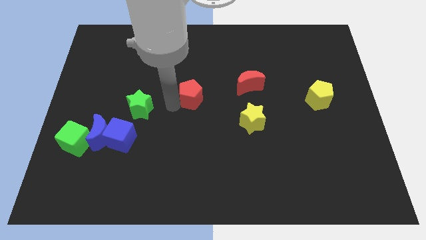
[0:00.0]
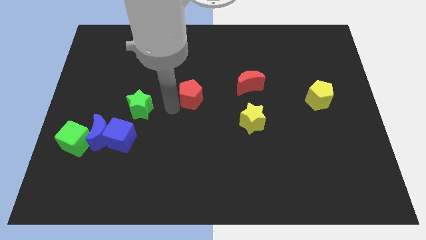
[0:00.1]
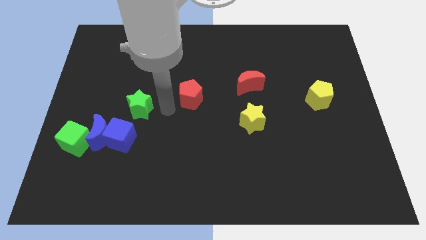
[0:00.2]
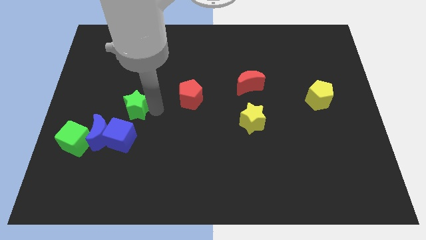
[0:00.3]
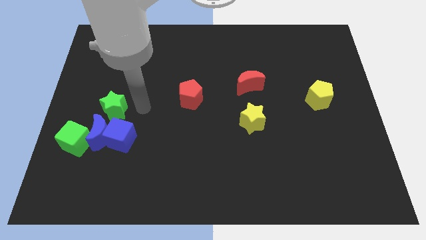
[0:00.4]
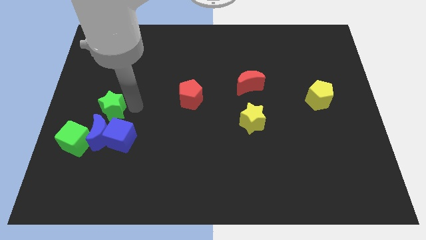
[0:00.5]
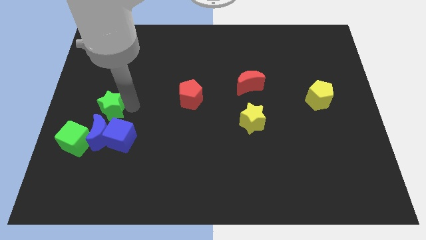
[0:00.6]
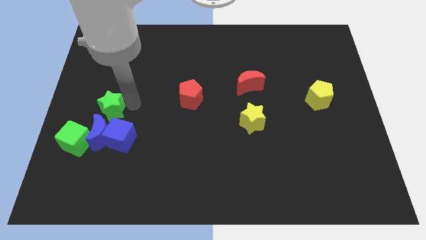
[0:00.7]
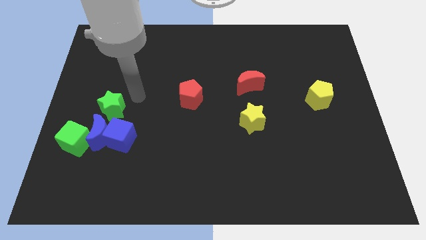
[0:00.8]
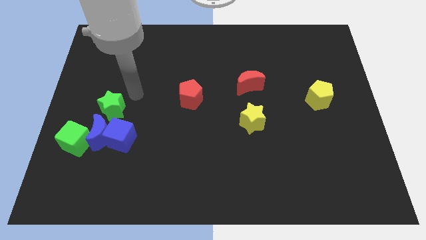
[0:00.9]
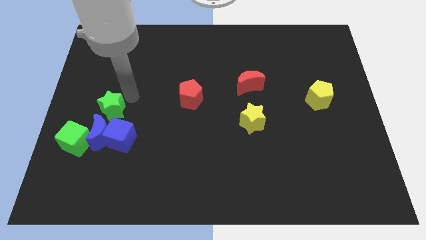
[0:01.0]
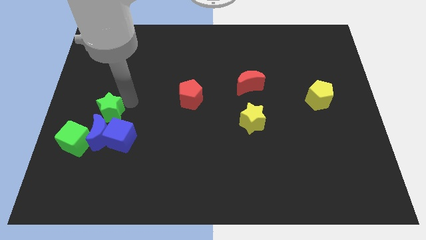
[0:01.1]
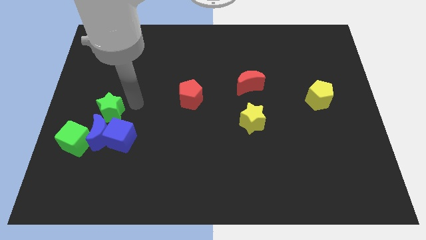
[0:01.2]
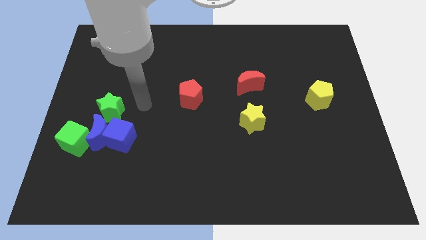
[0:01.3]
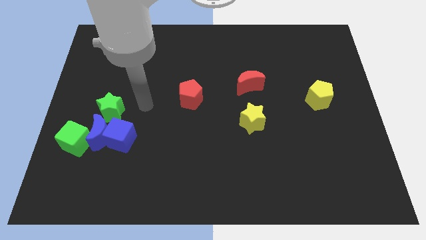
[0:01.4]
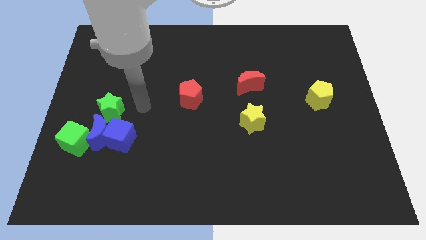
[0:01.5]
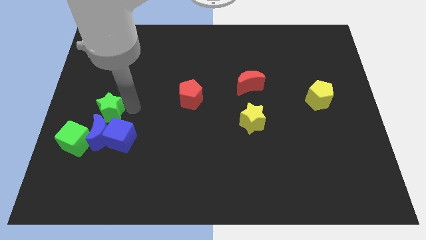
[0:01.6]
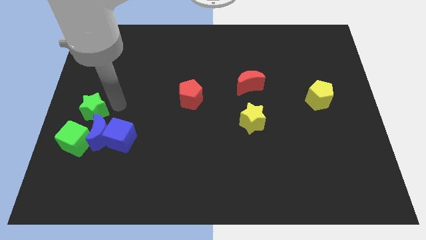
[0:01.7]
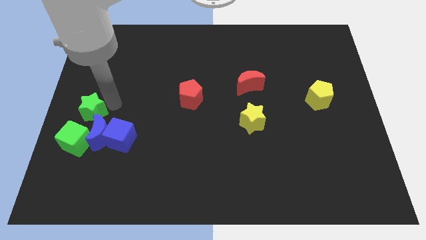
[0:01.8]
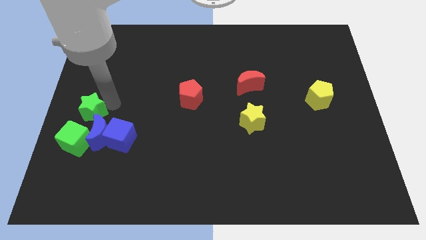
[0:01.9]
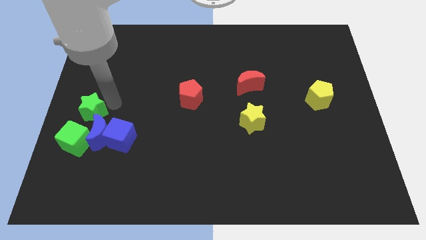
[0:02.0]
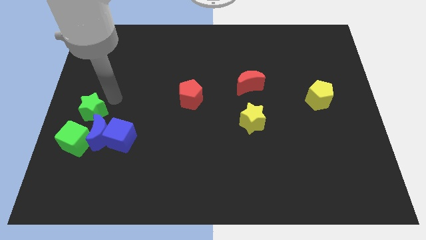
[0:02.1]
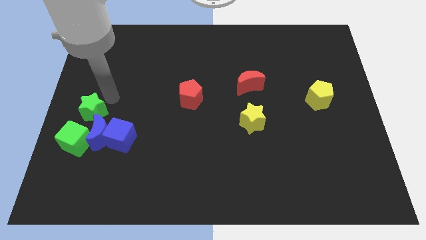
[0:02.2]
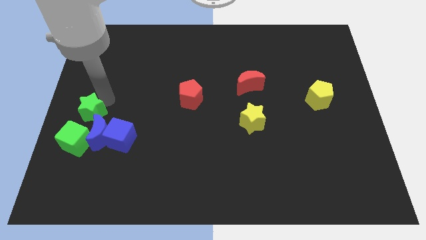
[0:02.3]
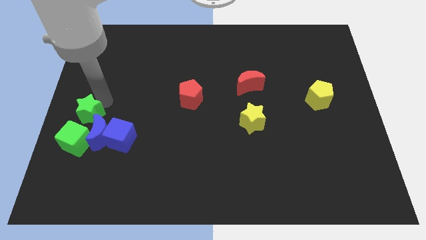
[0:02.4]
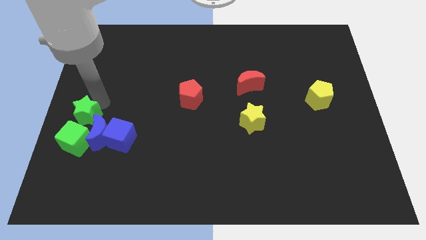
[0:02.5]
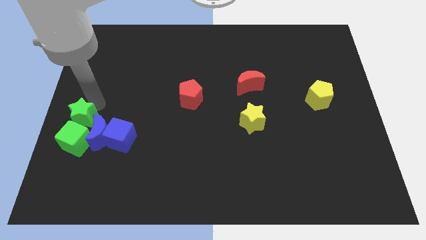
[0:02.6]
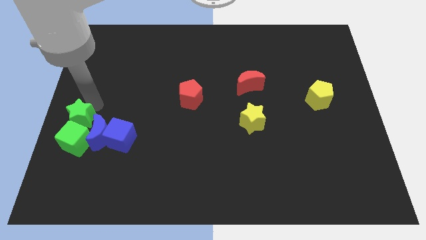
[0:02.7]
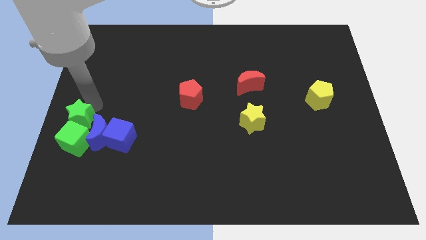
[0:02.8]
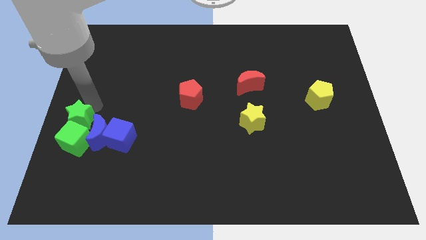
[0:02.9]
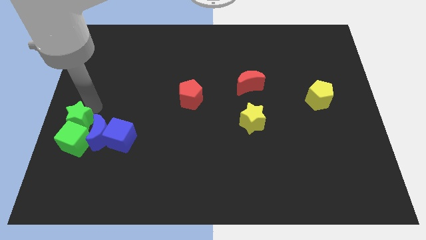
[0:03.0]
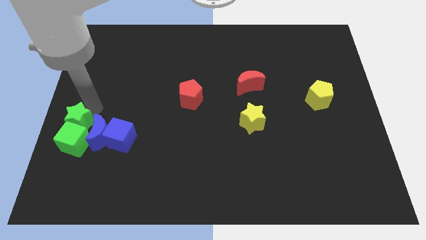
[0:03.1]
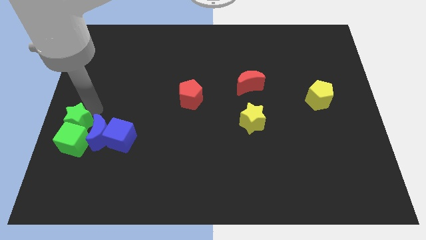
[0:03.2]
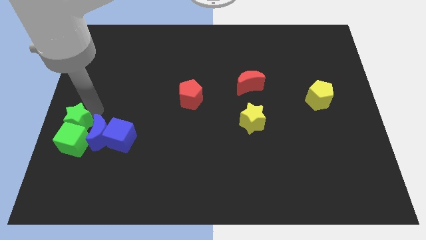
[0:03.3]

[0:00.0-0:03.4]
move the green star to the top of the green cube

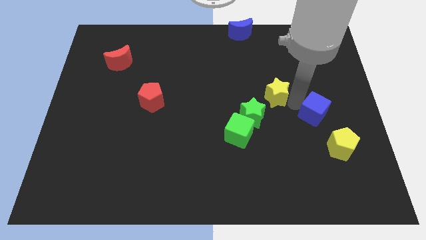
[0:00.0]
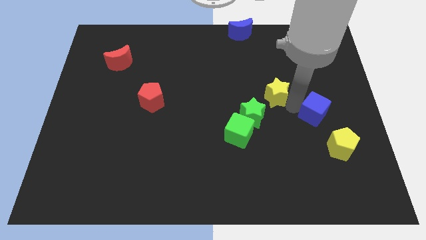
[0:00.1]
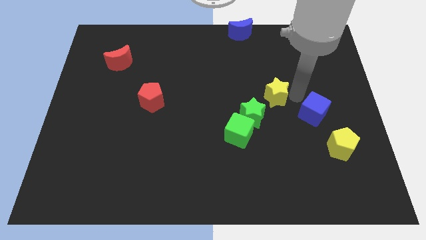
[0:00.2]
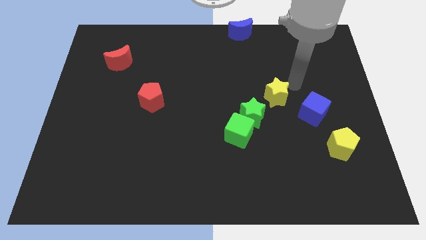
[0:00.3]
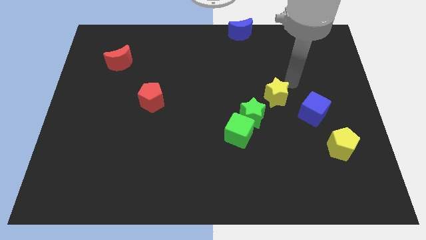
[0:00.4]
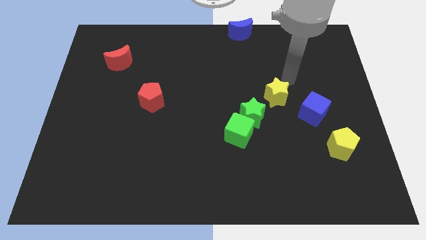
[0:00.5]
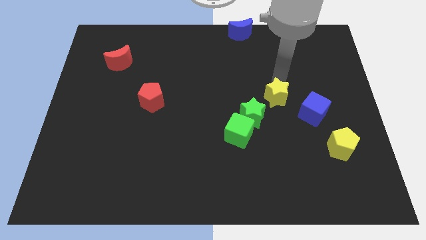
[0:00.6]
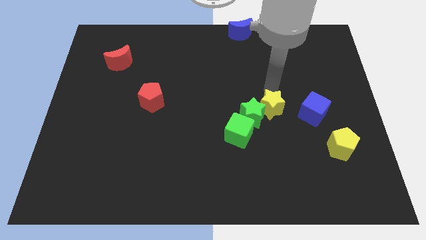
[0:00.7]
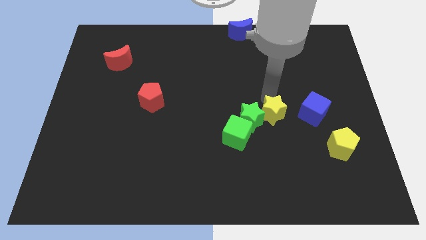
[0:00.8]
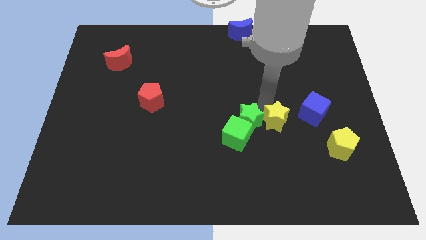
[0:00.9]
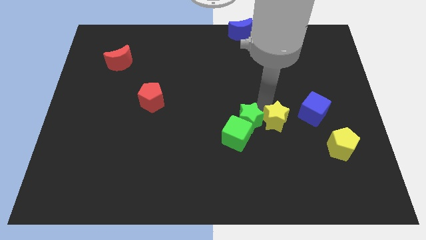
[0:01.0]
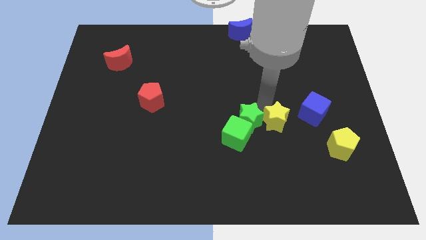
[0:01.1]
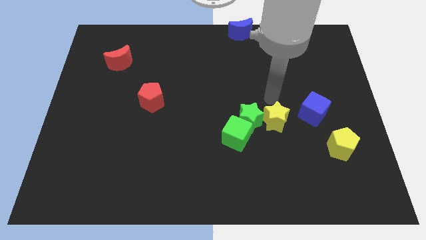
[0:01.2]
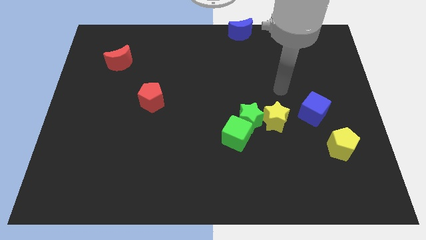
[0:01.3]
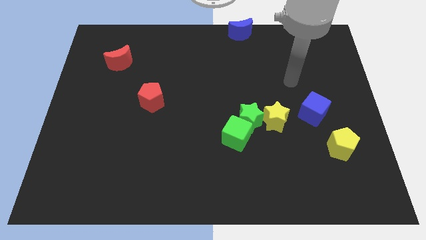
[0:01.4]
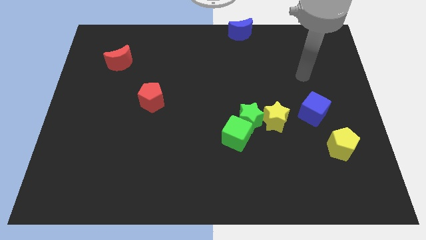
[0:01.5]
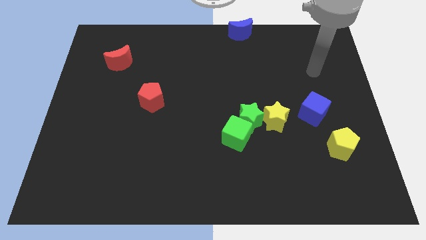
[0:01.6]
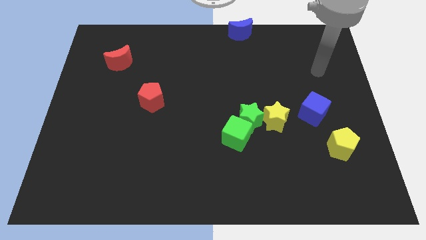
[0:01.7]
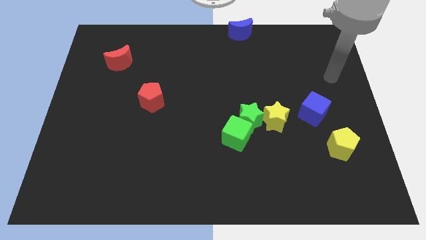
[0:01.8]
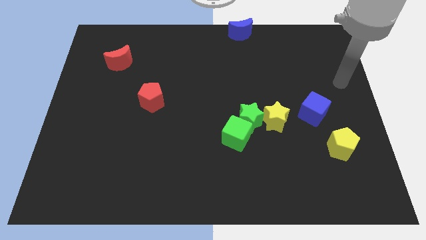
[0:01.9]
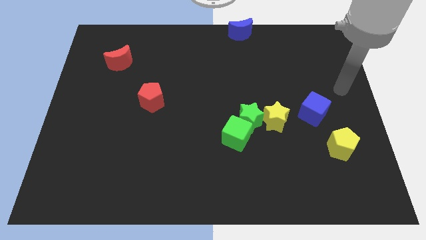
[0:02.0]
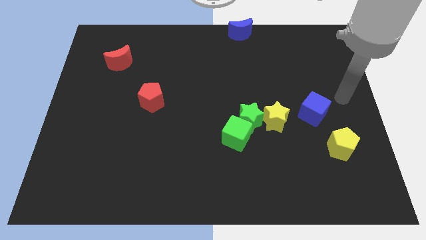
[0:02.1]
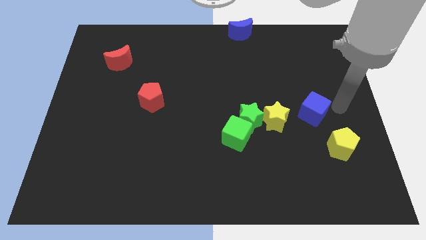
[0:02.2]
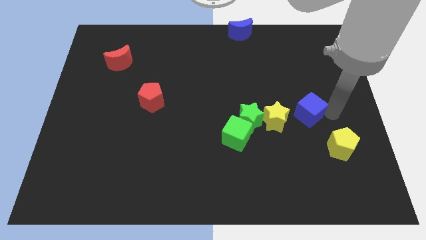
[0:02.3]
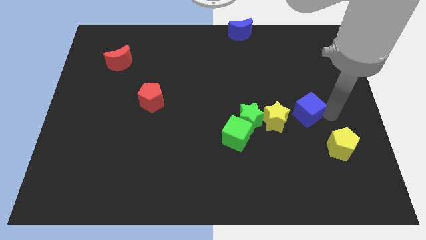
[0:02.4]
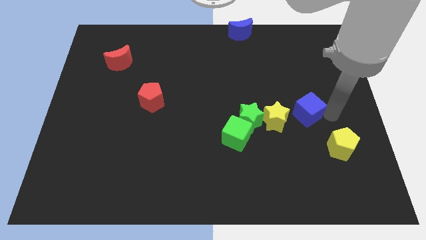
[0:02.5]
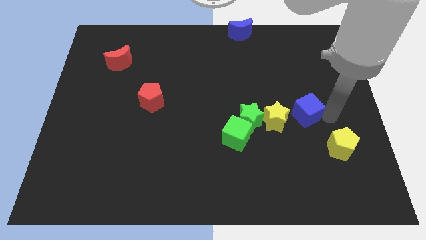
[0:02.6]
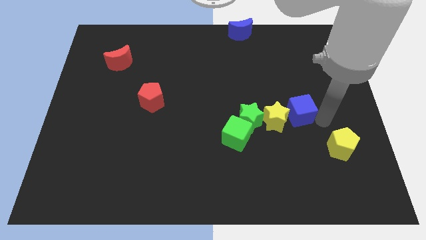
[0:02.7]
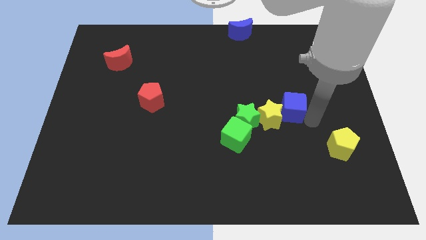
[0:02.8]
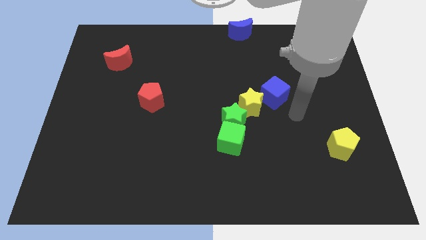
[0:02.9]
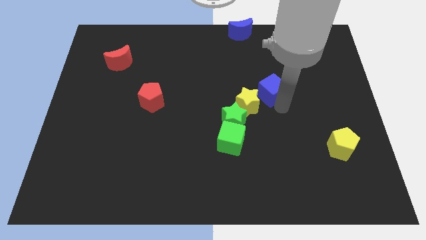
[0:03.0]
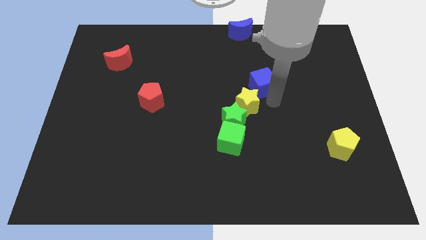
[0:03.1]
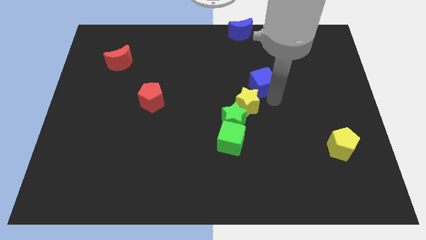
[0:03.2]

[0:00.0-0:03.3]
push the yellow star and blue cube on to the green star

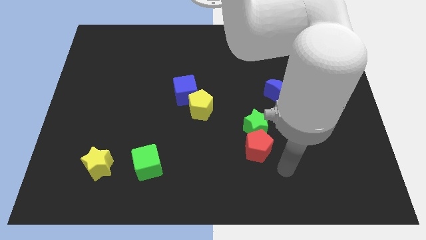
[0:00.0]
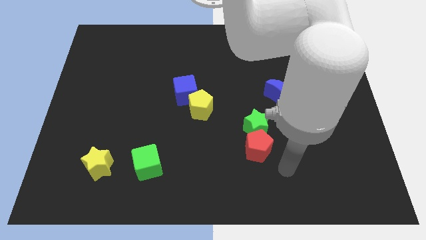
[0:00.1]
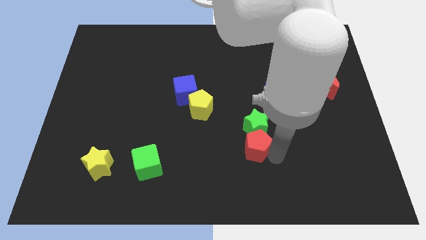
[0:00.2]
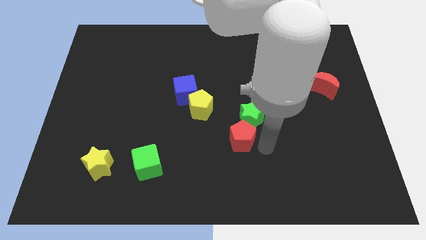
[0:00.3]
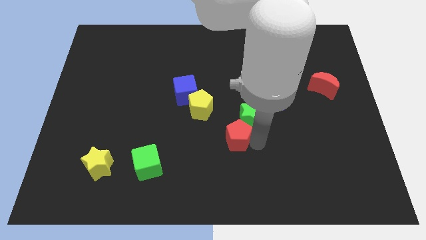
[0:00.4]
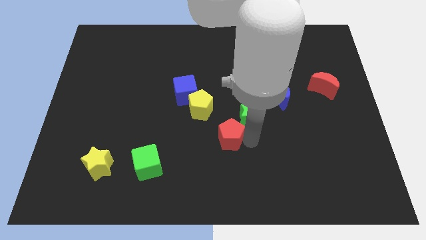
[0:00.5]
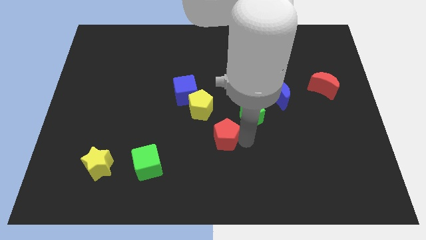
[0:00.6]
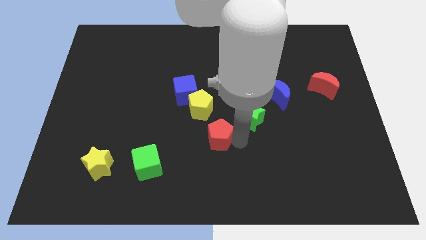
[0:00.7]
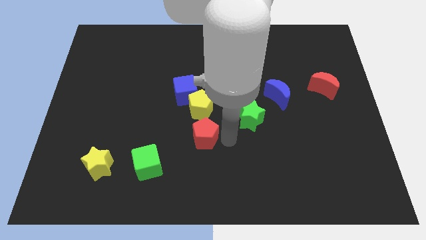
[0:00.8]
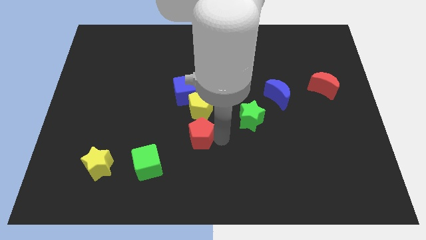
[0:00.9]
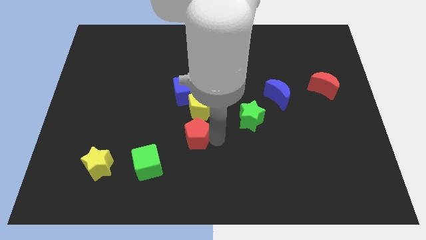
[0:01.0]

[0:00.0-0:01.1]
move the red pentagon away from the green star

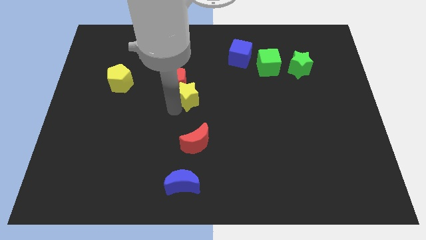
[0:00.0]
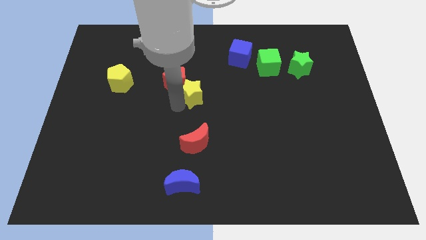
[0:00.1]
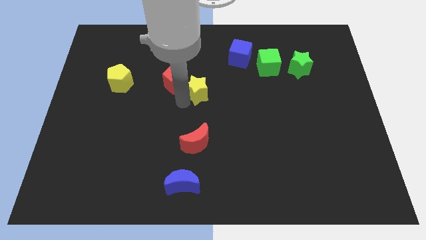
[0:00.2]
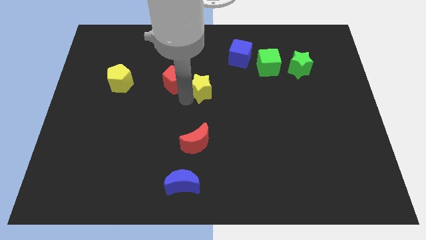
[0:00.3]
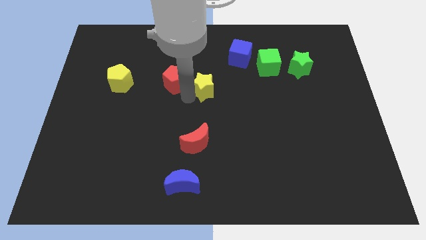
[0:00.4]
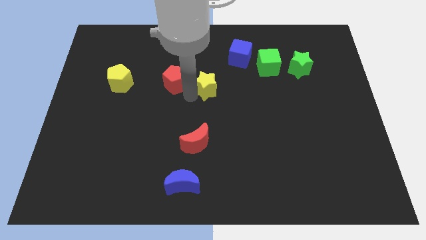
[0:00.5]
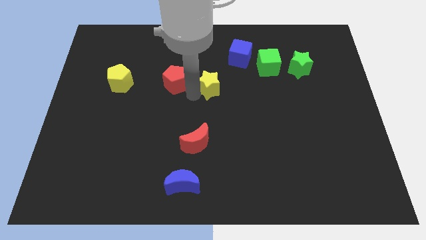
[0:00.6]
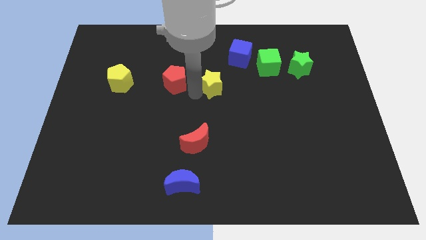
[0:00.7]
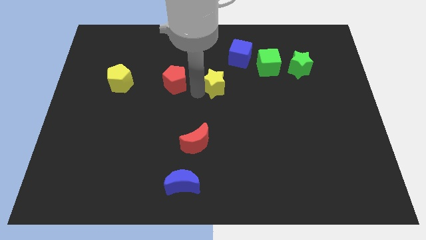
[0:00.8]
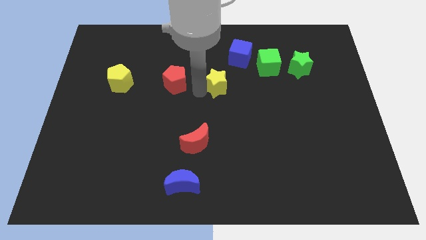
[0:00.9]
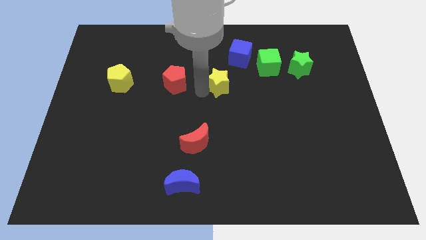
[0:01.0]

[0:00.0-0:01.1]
take the yellow star away from the red pentagon
